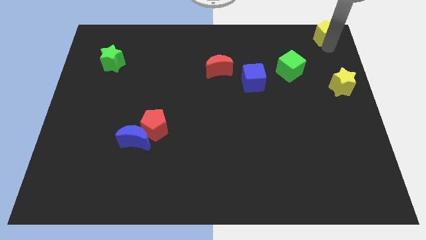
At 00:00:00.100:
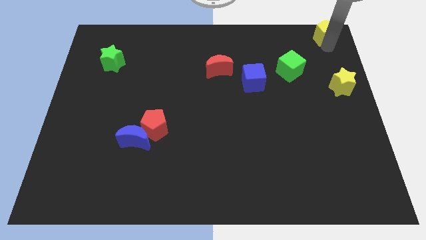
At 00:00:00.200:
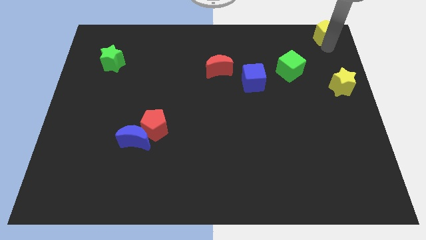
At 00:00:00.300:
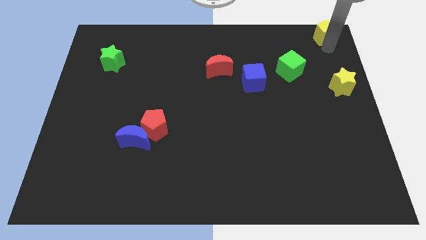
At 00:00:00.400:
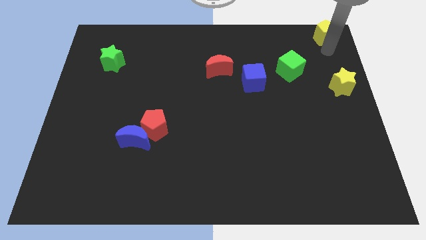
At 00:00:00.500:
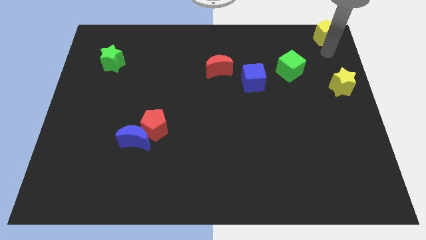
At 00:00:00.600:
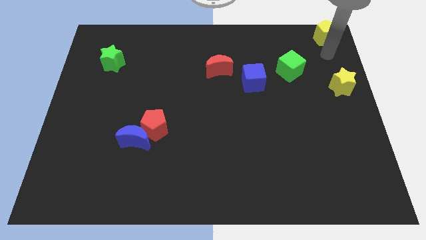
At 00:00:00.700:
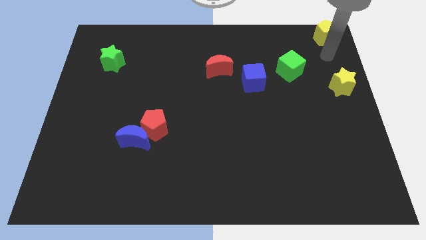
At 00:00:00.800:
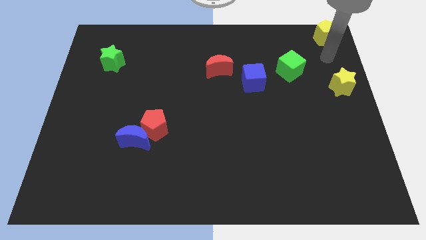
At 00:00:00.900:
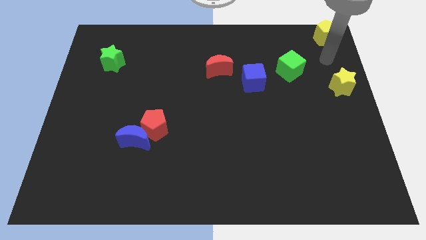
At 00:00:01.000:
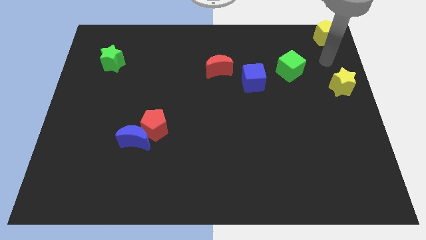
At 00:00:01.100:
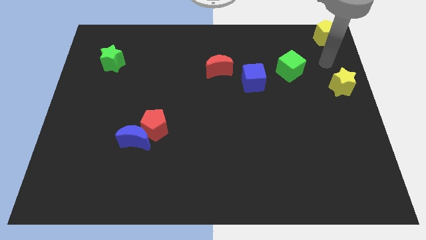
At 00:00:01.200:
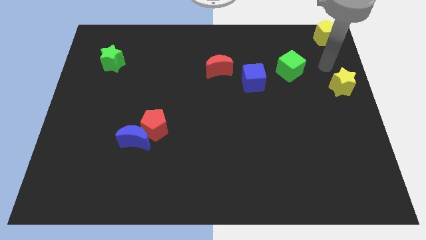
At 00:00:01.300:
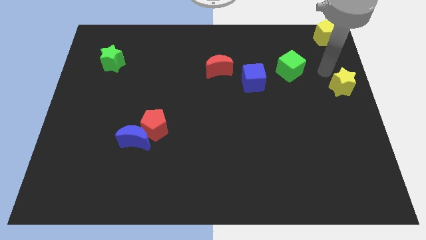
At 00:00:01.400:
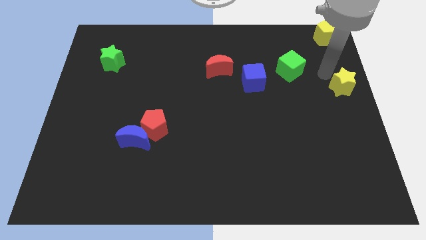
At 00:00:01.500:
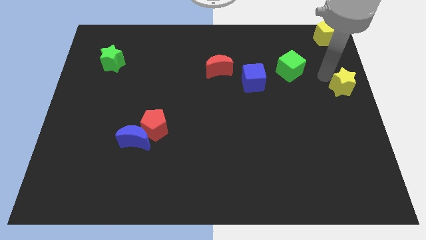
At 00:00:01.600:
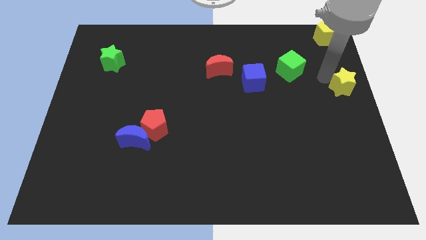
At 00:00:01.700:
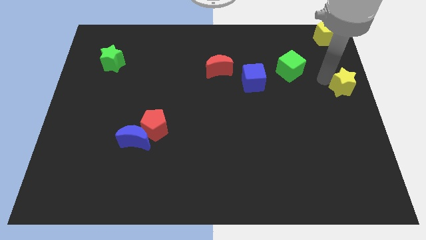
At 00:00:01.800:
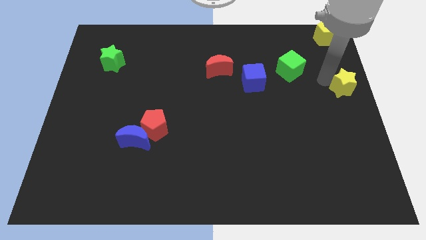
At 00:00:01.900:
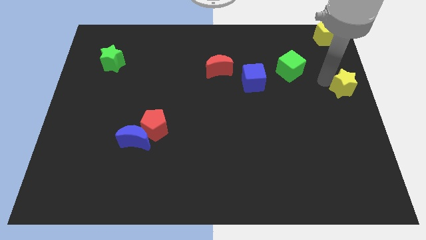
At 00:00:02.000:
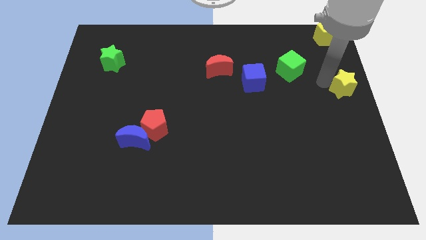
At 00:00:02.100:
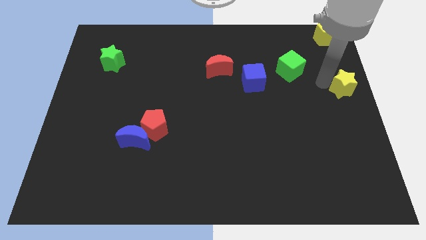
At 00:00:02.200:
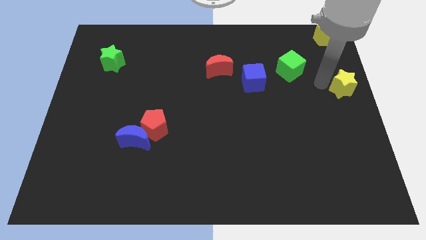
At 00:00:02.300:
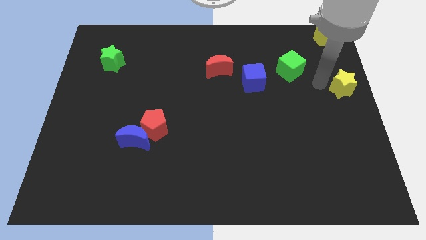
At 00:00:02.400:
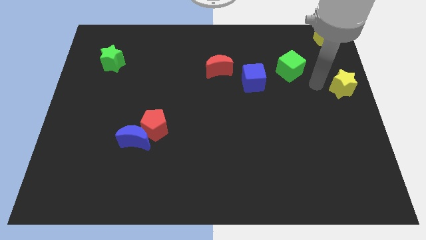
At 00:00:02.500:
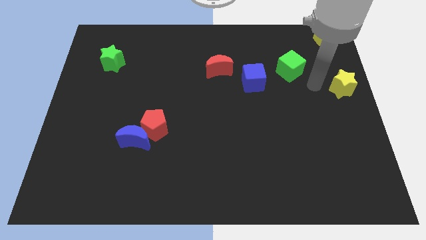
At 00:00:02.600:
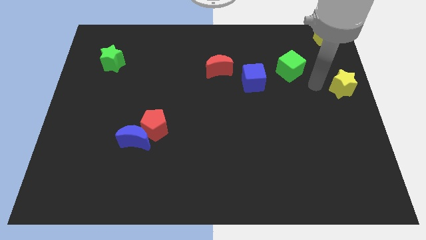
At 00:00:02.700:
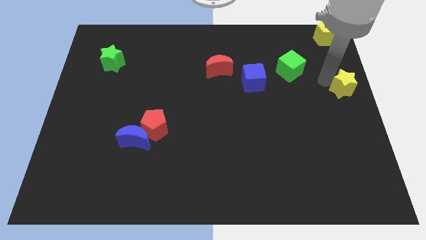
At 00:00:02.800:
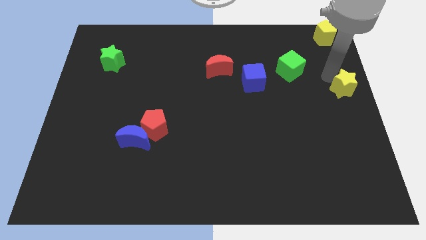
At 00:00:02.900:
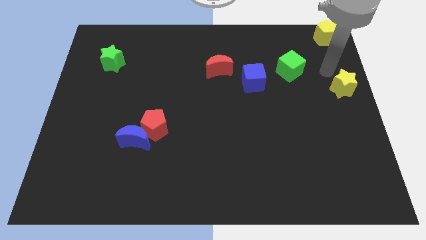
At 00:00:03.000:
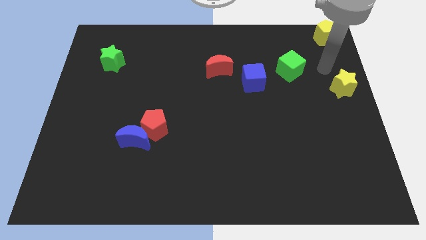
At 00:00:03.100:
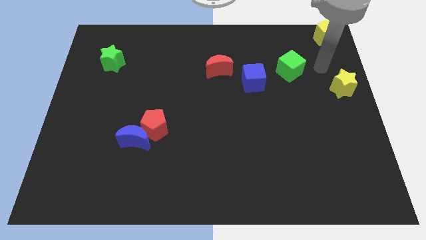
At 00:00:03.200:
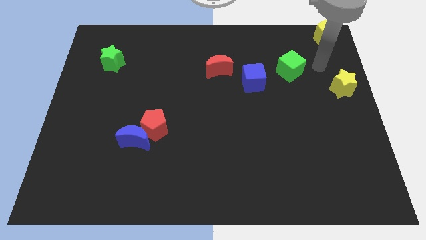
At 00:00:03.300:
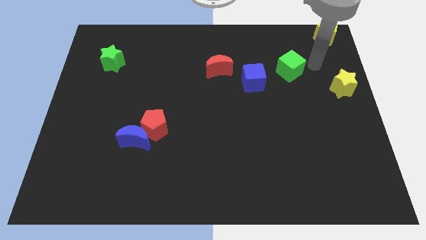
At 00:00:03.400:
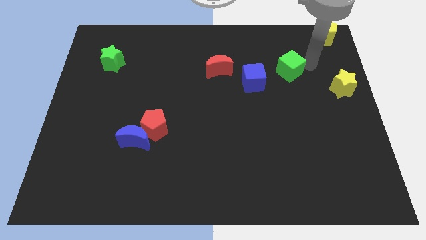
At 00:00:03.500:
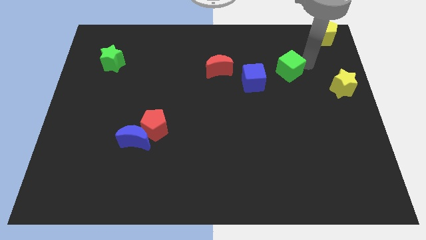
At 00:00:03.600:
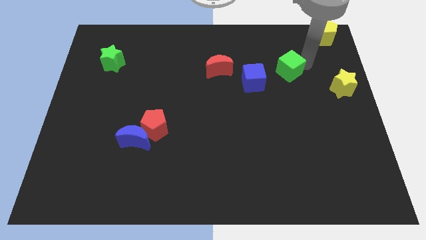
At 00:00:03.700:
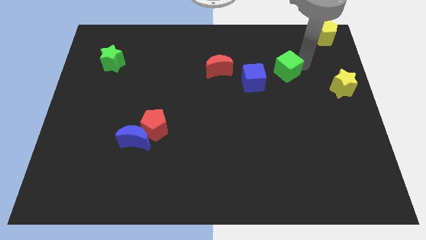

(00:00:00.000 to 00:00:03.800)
point your arm beside green cube

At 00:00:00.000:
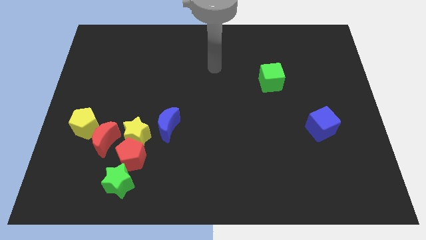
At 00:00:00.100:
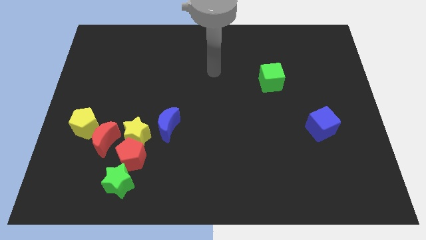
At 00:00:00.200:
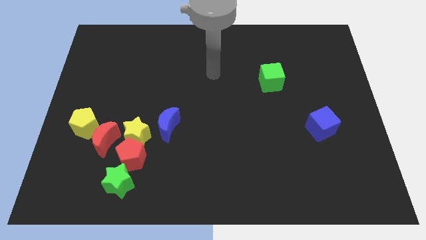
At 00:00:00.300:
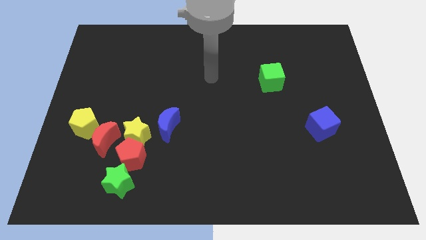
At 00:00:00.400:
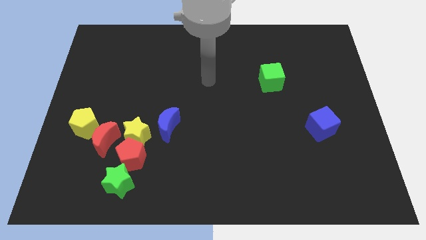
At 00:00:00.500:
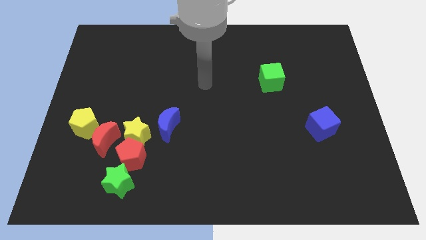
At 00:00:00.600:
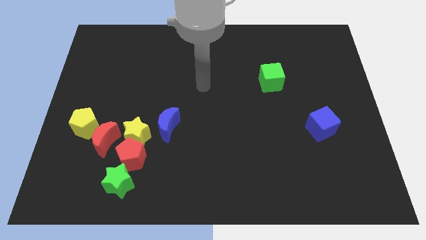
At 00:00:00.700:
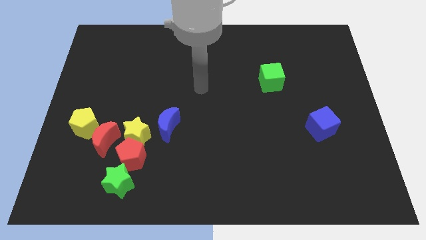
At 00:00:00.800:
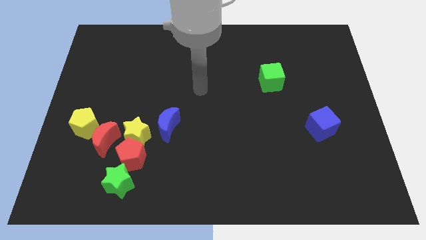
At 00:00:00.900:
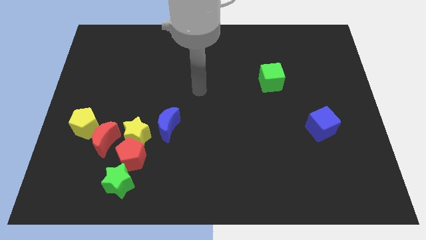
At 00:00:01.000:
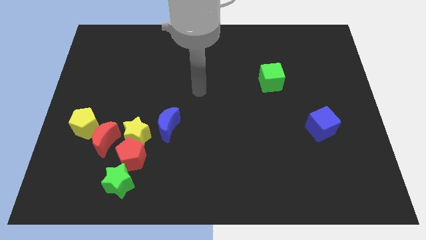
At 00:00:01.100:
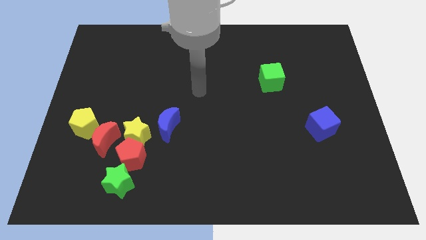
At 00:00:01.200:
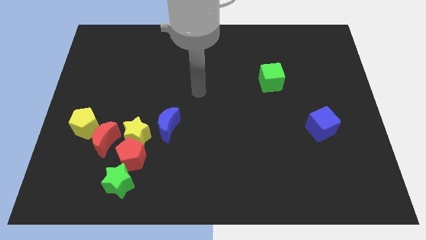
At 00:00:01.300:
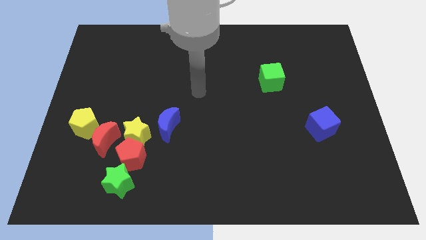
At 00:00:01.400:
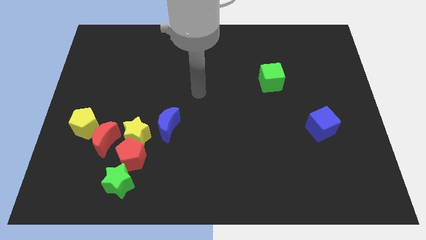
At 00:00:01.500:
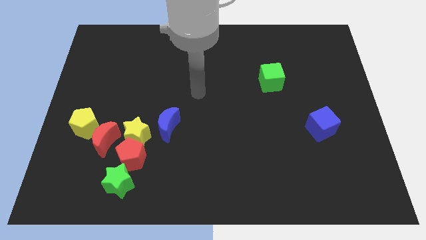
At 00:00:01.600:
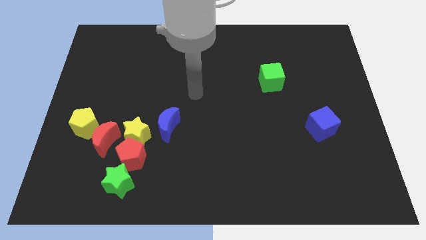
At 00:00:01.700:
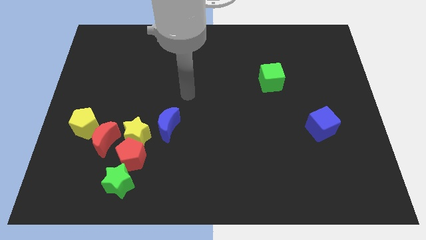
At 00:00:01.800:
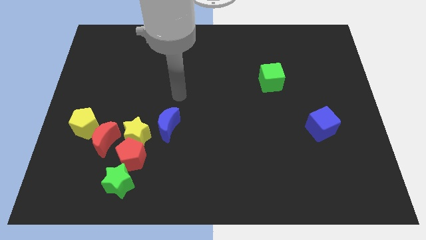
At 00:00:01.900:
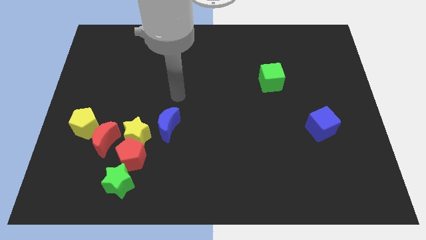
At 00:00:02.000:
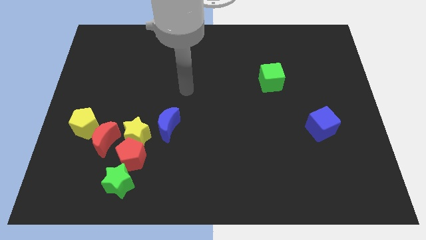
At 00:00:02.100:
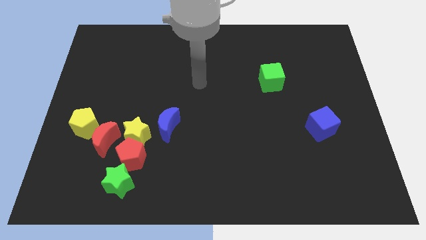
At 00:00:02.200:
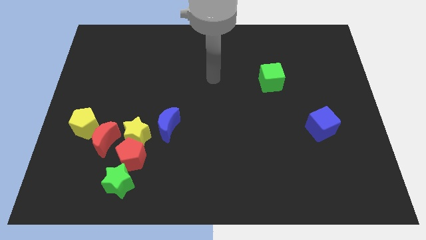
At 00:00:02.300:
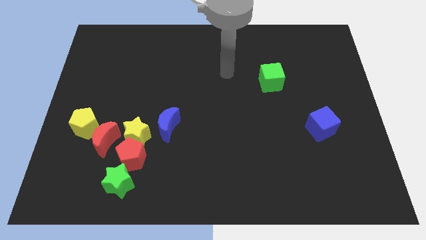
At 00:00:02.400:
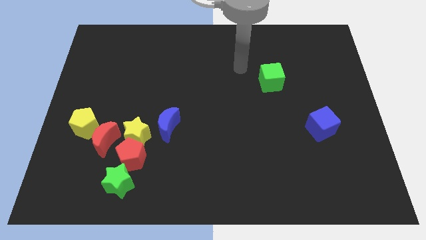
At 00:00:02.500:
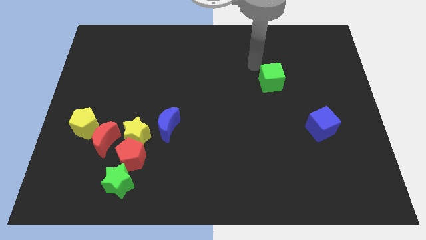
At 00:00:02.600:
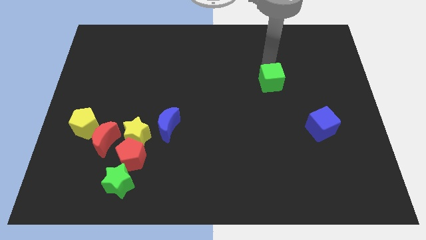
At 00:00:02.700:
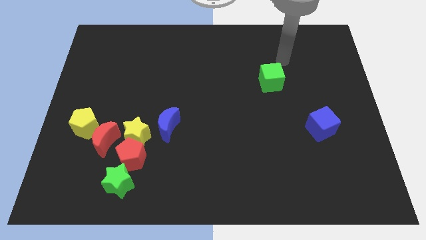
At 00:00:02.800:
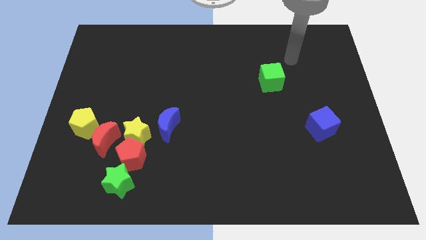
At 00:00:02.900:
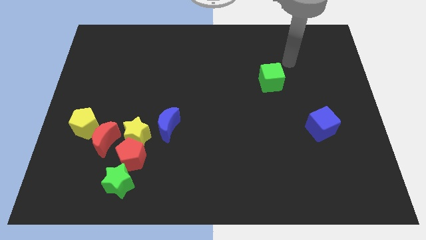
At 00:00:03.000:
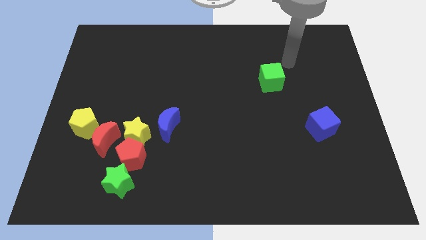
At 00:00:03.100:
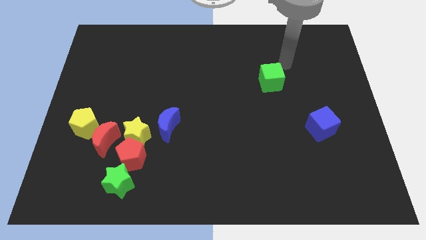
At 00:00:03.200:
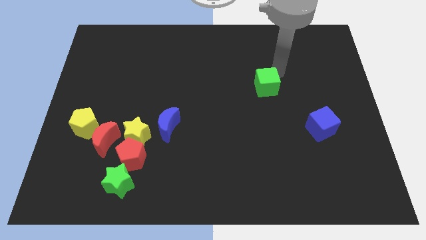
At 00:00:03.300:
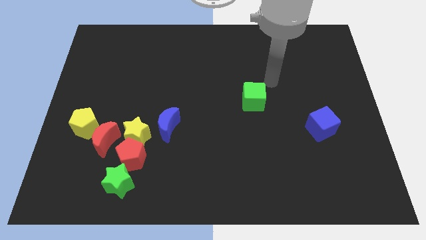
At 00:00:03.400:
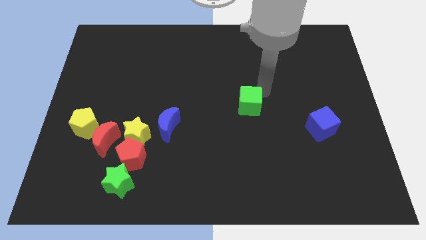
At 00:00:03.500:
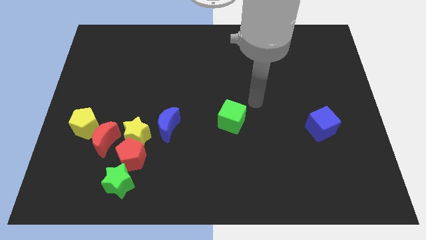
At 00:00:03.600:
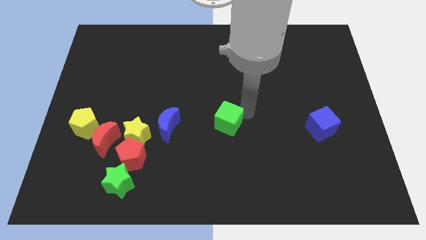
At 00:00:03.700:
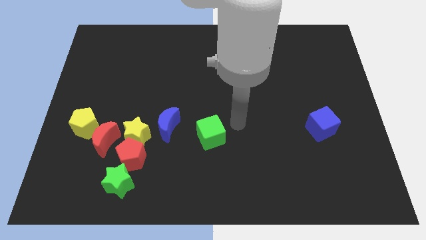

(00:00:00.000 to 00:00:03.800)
place the green cube to the right of the blue crescent

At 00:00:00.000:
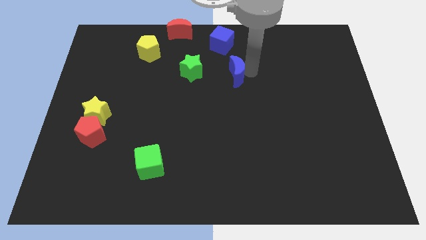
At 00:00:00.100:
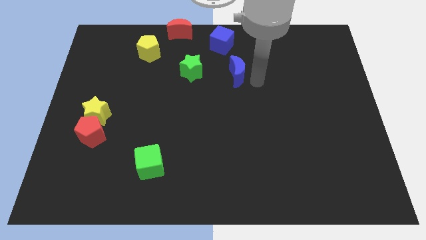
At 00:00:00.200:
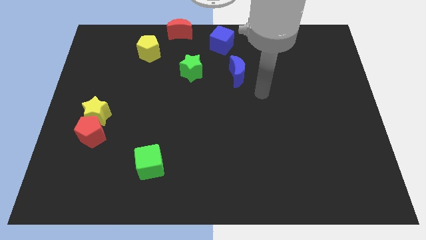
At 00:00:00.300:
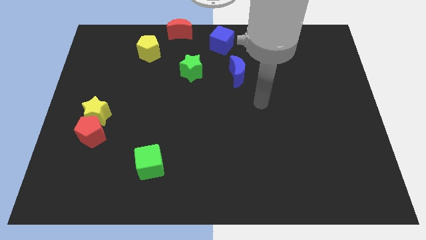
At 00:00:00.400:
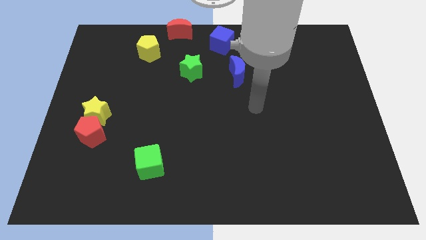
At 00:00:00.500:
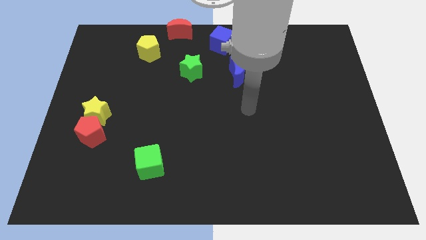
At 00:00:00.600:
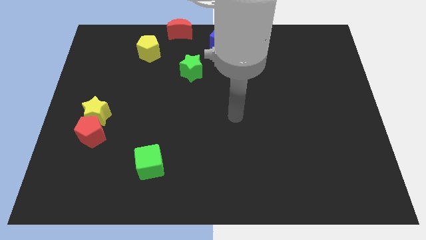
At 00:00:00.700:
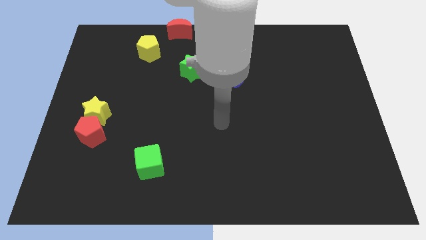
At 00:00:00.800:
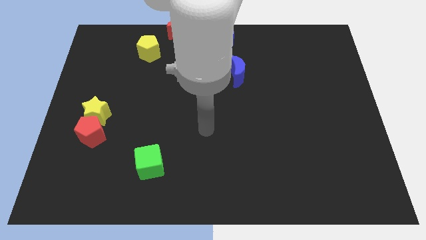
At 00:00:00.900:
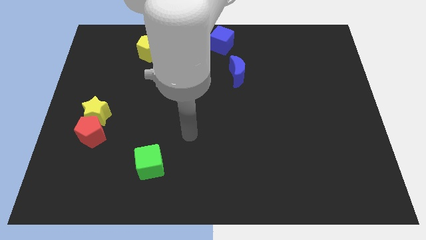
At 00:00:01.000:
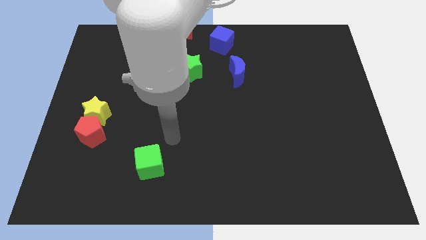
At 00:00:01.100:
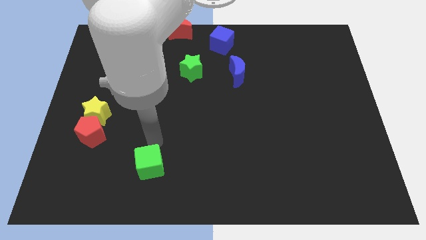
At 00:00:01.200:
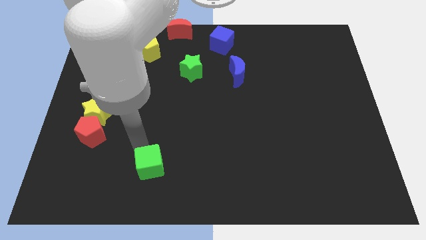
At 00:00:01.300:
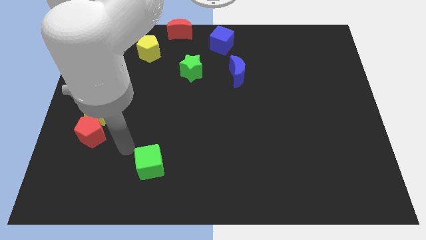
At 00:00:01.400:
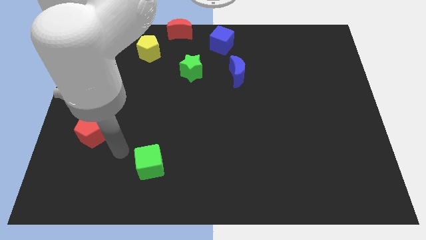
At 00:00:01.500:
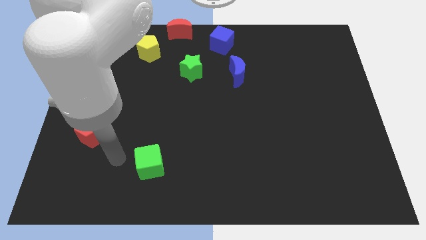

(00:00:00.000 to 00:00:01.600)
move your arm away from the blue moon
